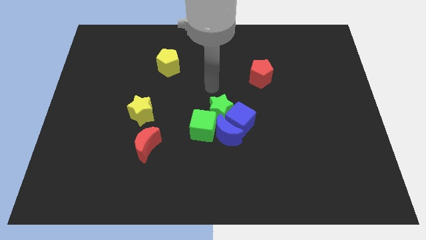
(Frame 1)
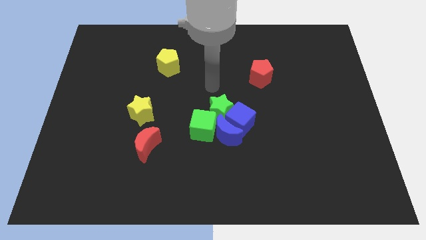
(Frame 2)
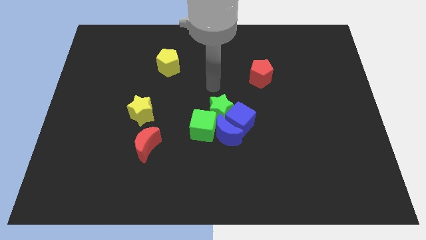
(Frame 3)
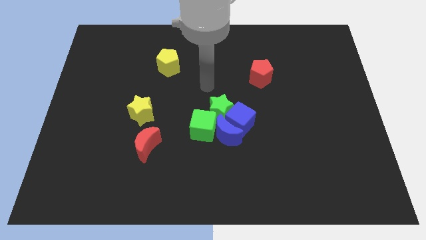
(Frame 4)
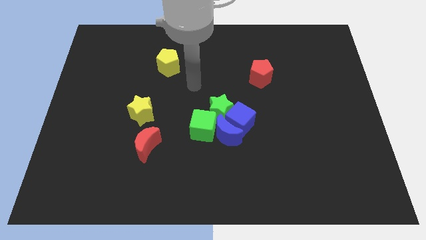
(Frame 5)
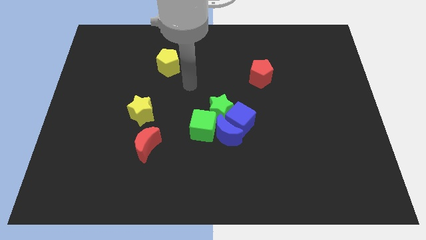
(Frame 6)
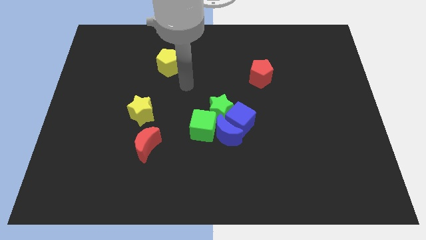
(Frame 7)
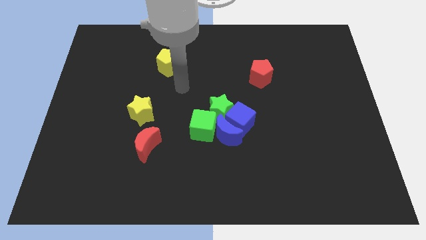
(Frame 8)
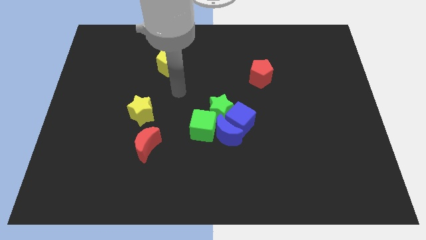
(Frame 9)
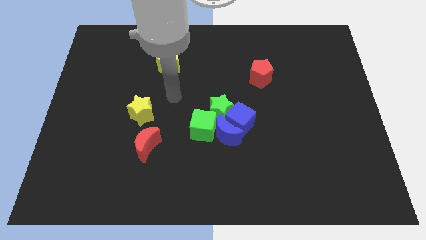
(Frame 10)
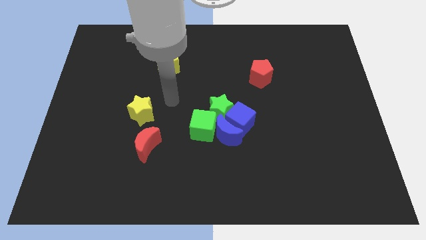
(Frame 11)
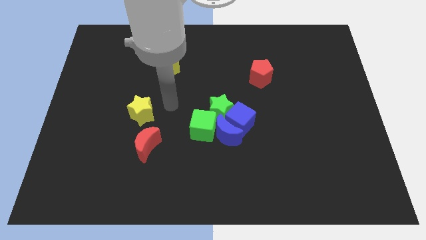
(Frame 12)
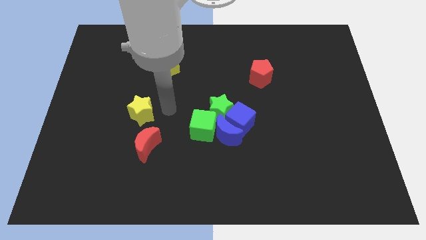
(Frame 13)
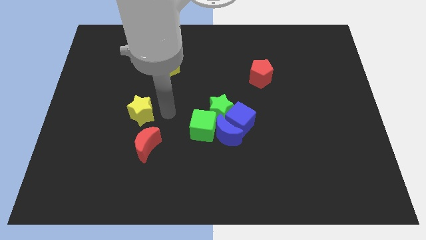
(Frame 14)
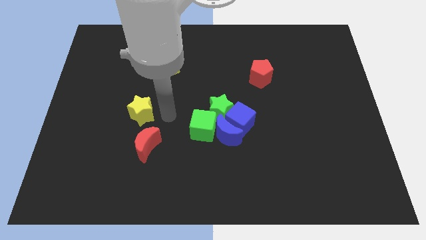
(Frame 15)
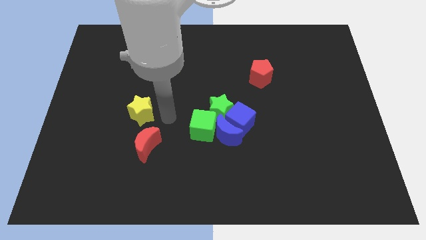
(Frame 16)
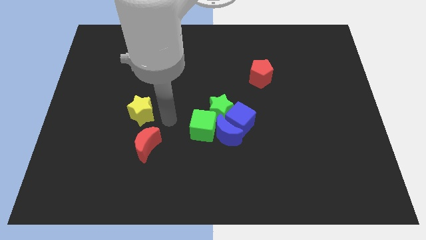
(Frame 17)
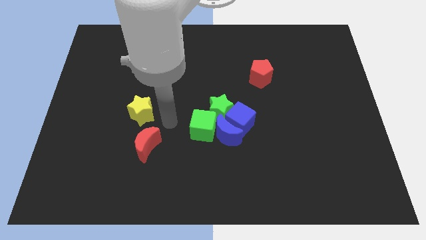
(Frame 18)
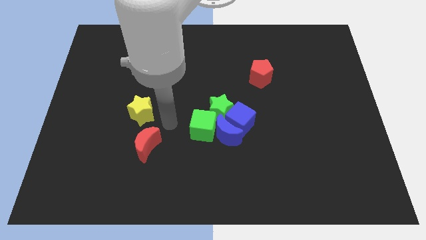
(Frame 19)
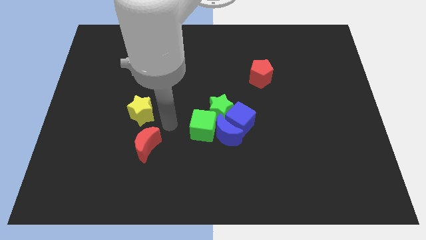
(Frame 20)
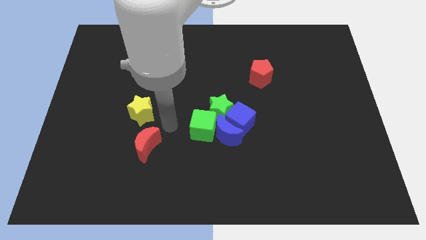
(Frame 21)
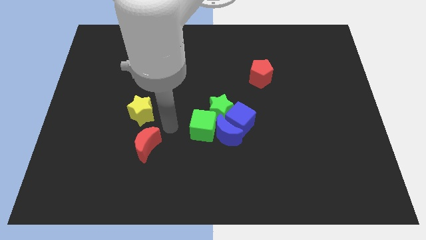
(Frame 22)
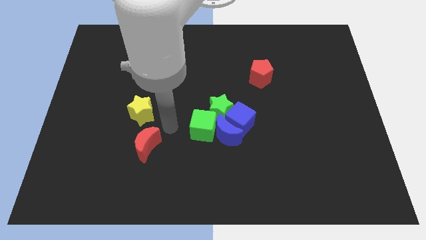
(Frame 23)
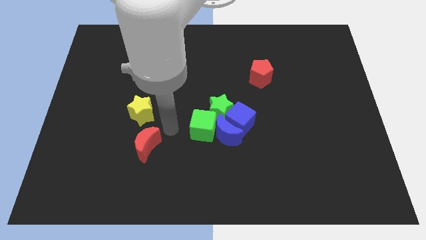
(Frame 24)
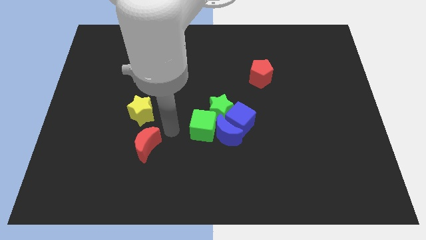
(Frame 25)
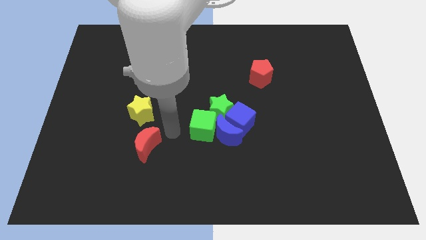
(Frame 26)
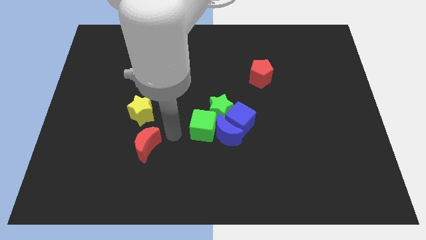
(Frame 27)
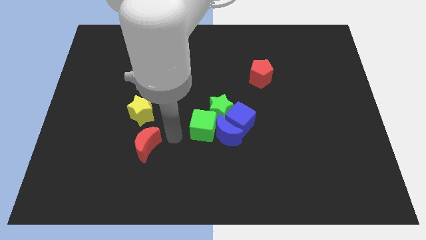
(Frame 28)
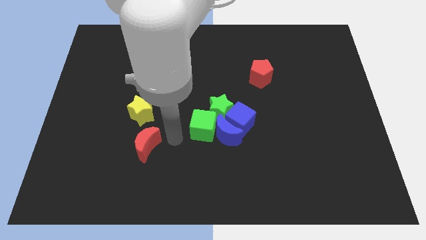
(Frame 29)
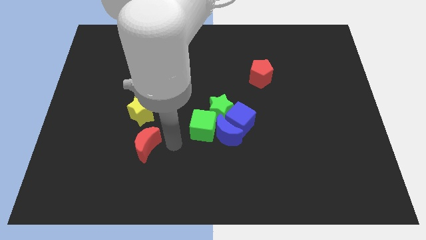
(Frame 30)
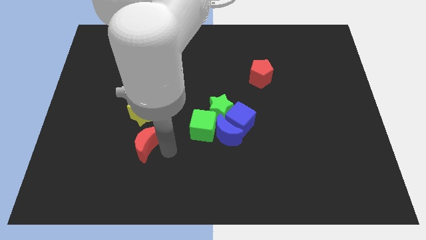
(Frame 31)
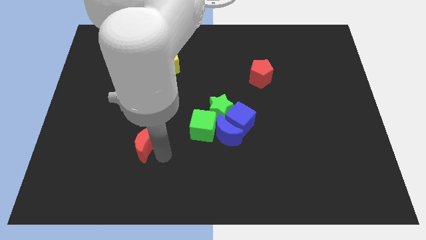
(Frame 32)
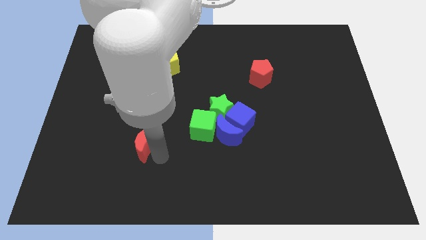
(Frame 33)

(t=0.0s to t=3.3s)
move your arm to the right of the red crescent

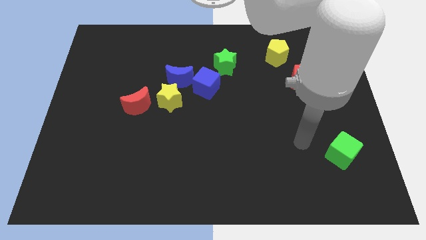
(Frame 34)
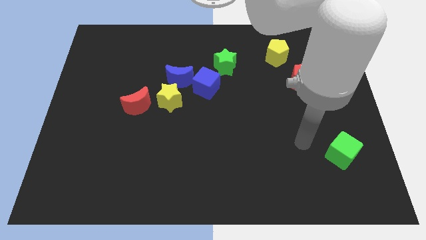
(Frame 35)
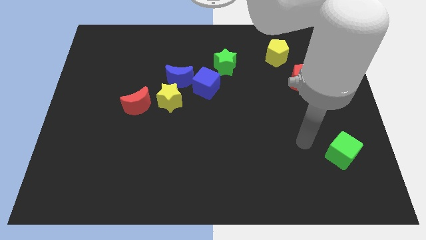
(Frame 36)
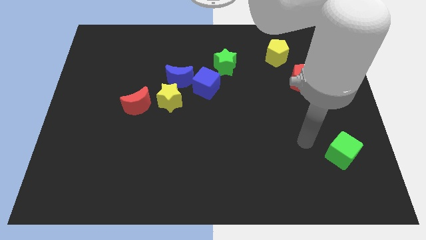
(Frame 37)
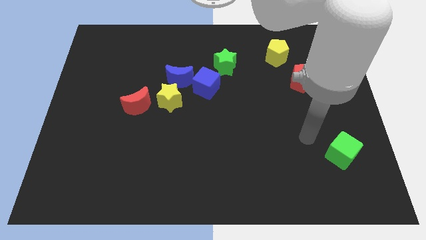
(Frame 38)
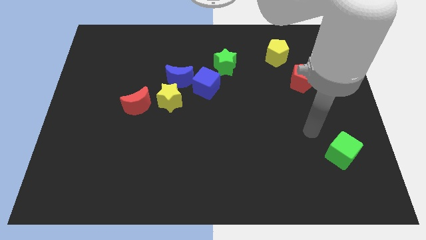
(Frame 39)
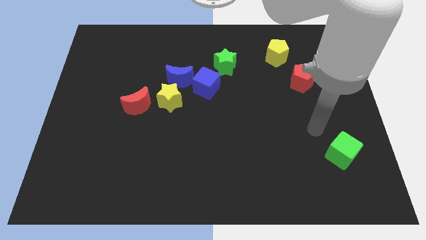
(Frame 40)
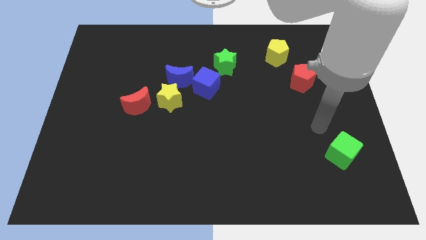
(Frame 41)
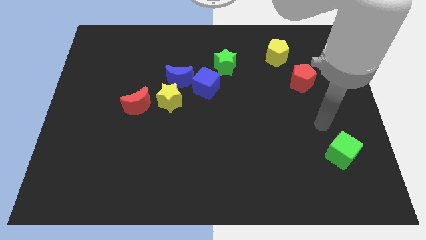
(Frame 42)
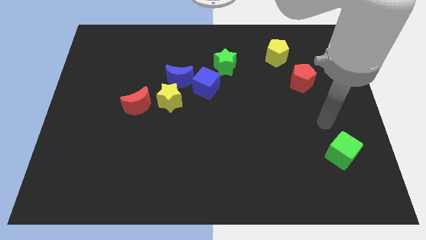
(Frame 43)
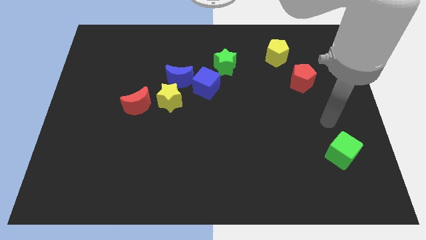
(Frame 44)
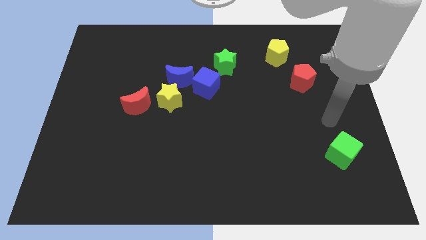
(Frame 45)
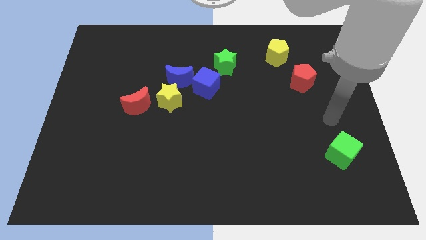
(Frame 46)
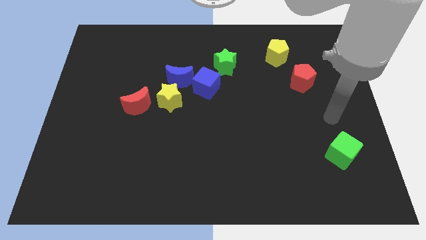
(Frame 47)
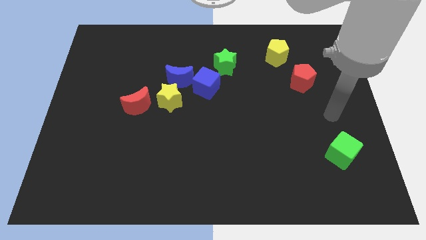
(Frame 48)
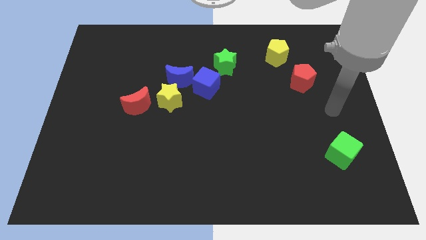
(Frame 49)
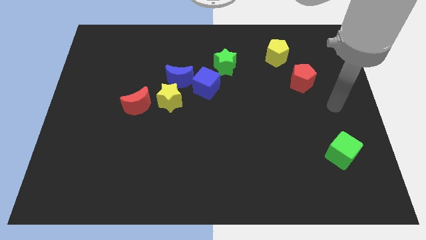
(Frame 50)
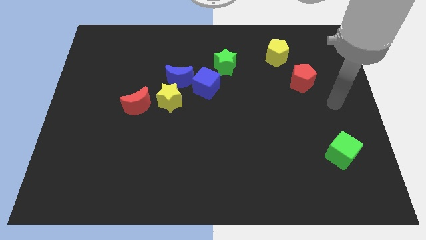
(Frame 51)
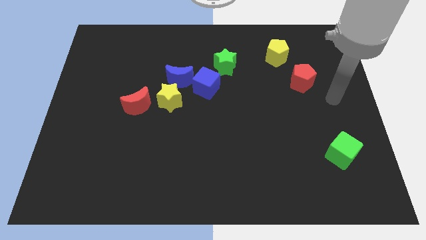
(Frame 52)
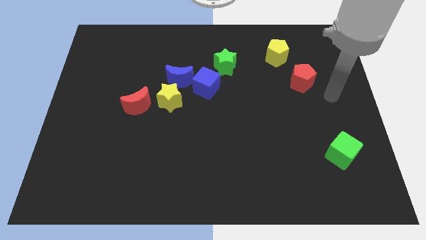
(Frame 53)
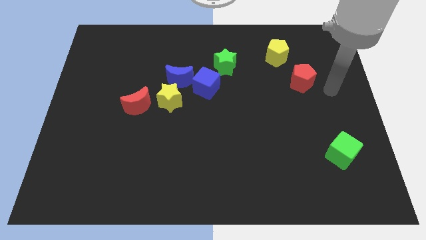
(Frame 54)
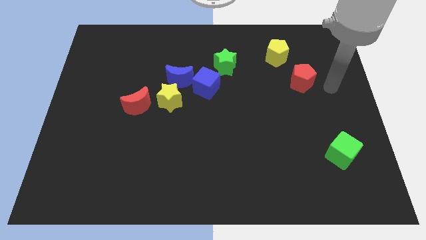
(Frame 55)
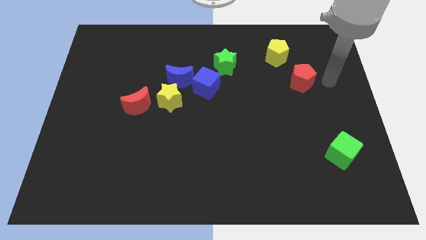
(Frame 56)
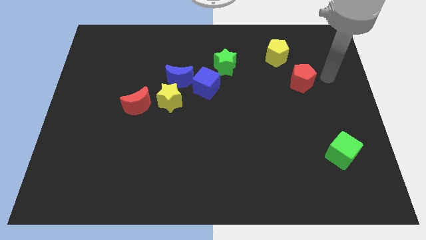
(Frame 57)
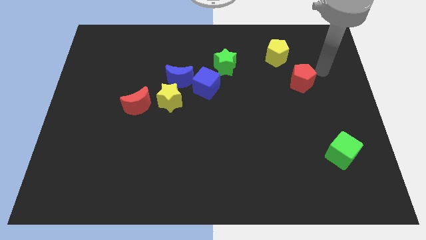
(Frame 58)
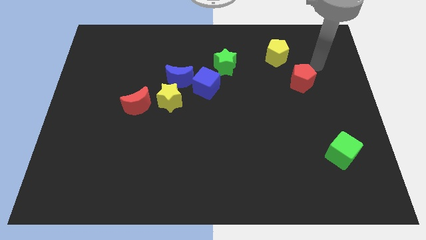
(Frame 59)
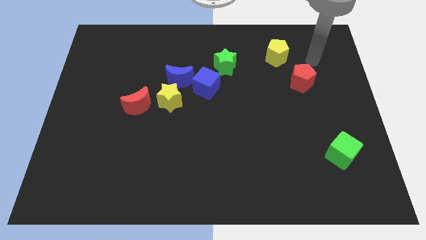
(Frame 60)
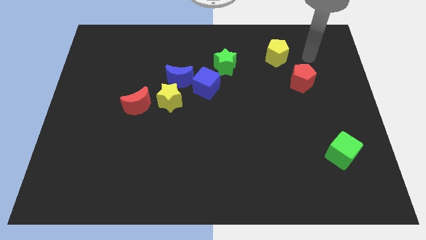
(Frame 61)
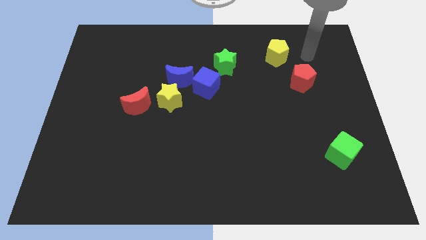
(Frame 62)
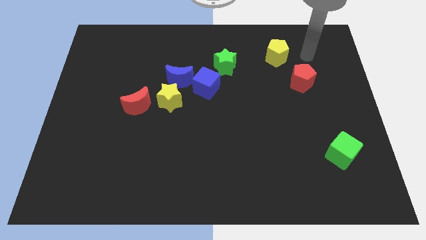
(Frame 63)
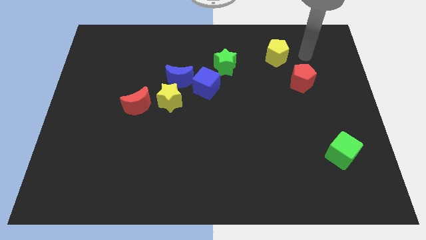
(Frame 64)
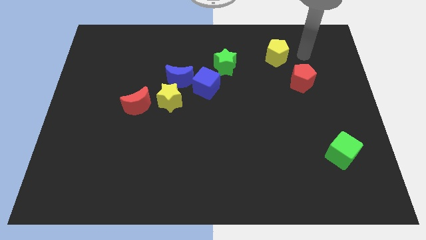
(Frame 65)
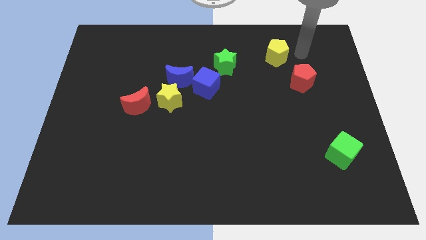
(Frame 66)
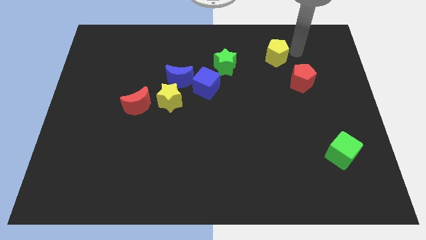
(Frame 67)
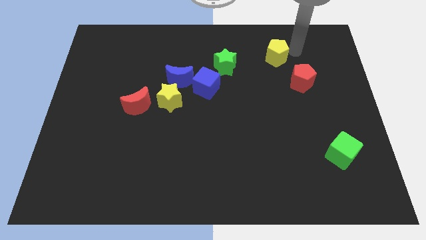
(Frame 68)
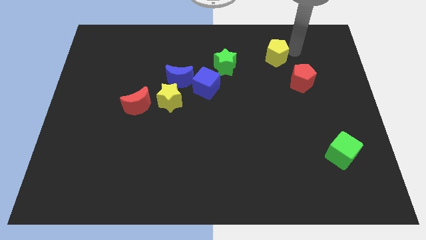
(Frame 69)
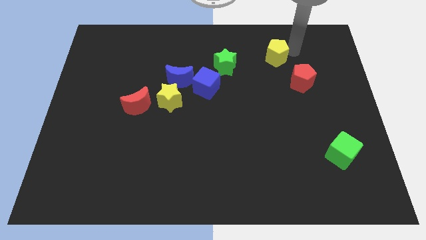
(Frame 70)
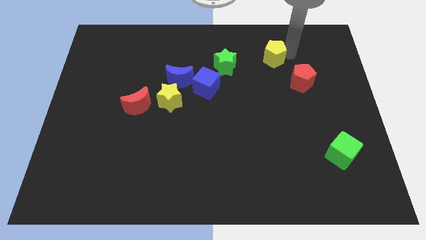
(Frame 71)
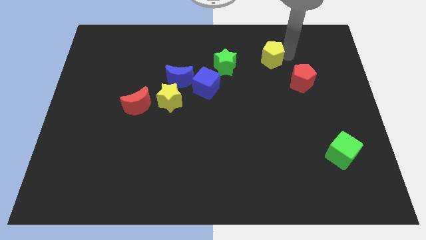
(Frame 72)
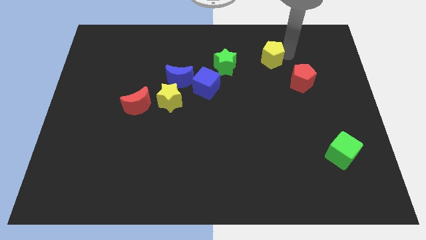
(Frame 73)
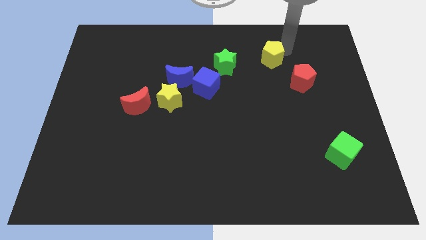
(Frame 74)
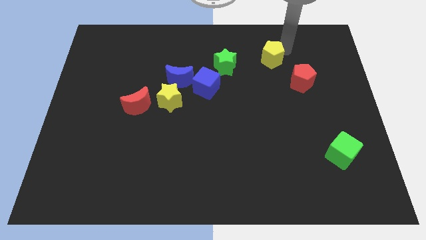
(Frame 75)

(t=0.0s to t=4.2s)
place the arm to the top right of yellow pentagon

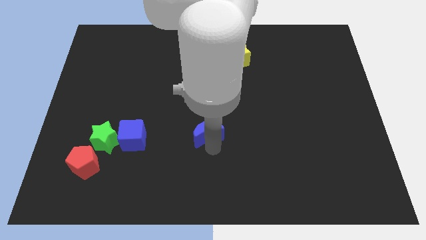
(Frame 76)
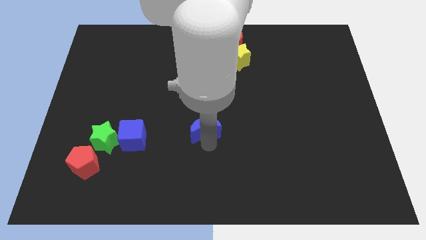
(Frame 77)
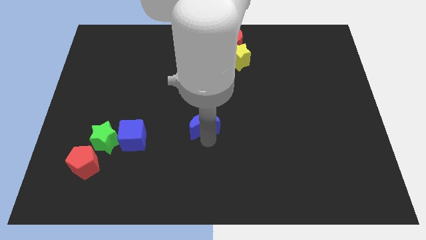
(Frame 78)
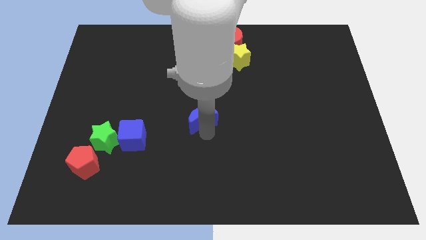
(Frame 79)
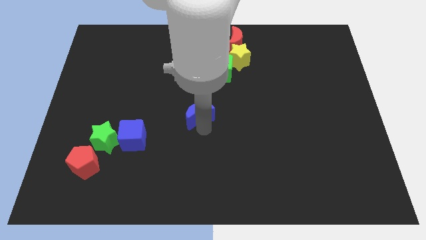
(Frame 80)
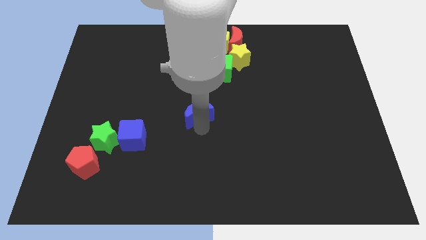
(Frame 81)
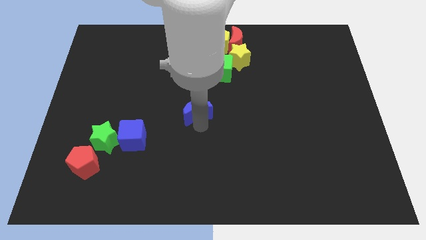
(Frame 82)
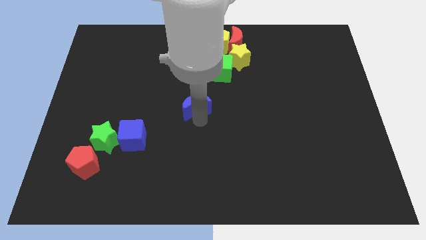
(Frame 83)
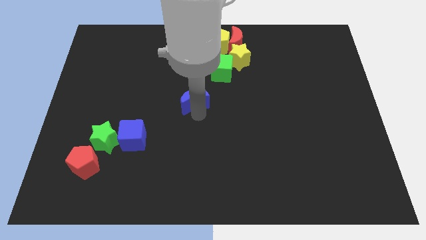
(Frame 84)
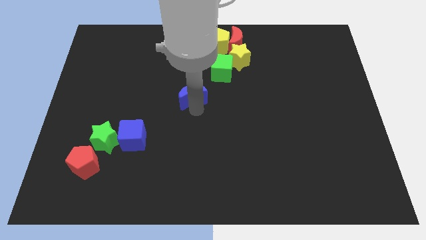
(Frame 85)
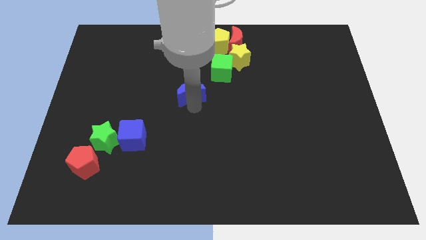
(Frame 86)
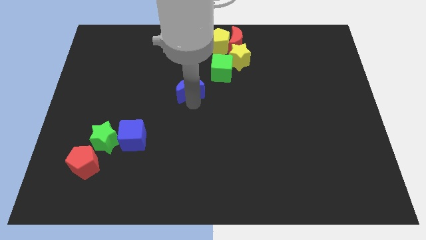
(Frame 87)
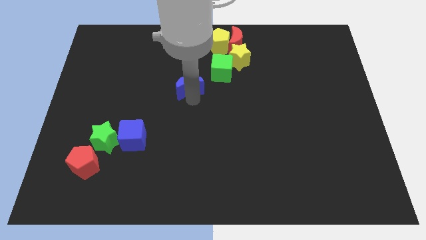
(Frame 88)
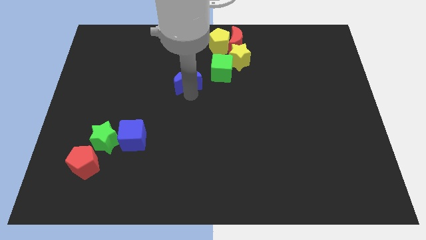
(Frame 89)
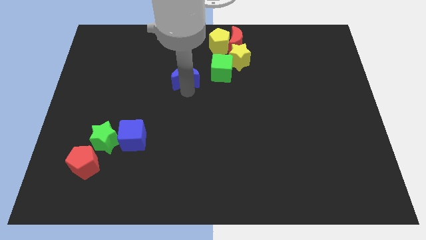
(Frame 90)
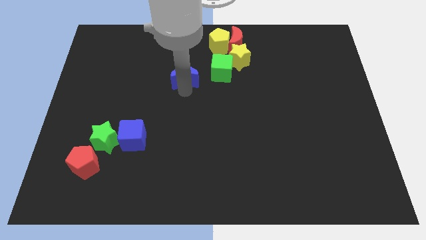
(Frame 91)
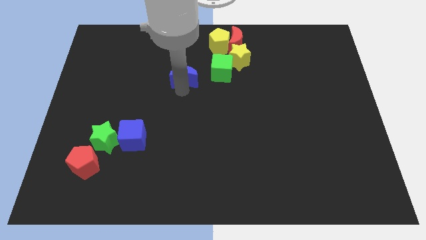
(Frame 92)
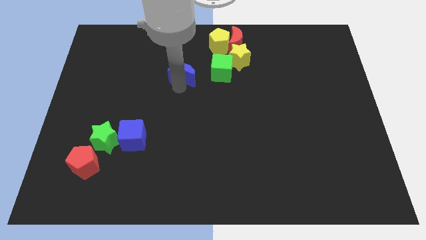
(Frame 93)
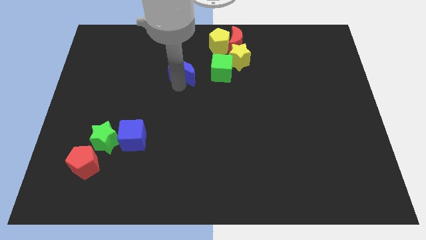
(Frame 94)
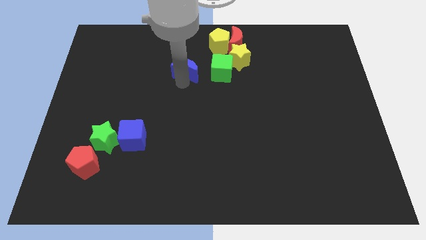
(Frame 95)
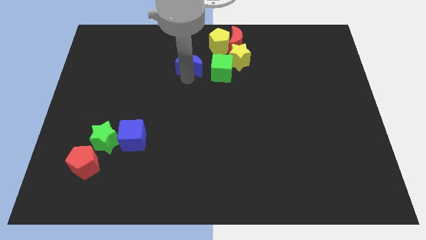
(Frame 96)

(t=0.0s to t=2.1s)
push the blue moon upwards
